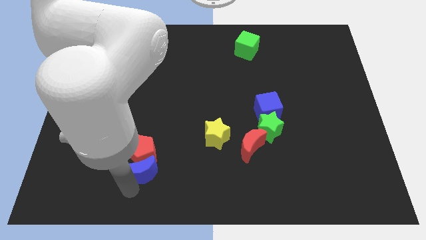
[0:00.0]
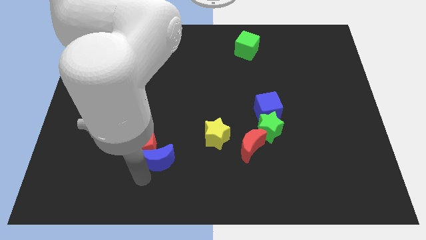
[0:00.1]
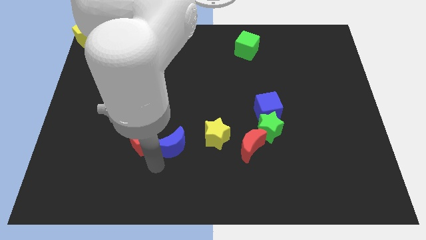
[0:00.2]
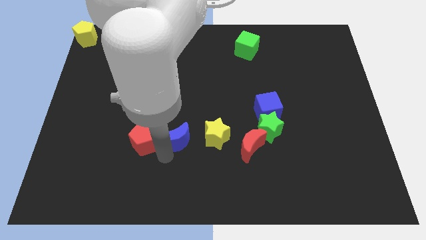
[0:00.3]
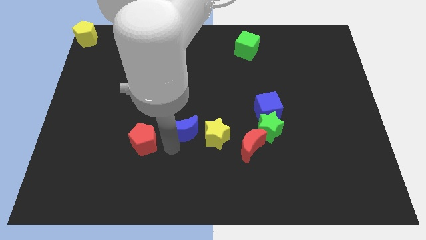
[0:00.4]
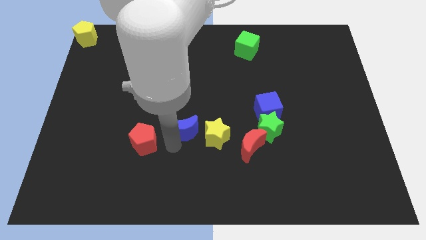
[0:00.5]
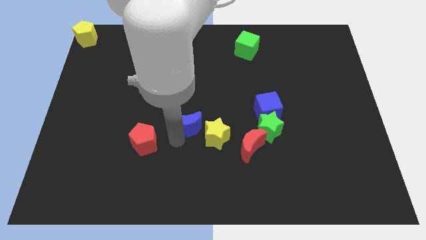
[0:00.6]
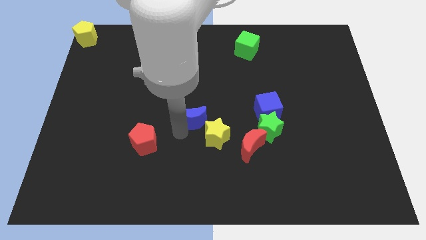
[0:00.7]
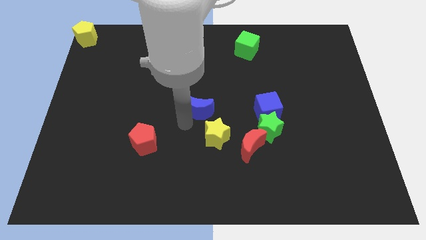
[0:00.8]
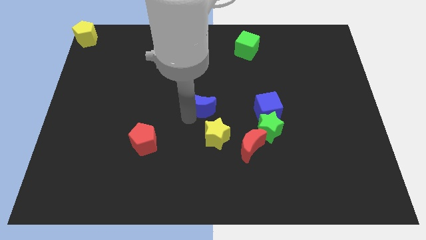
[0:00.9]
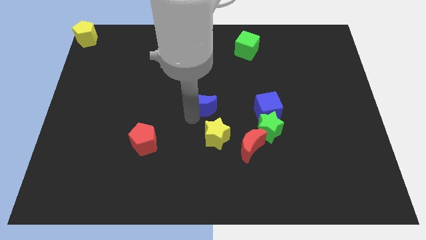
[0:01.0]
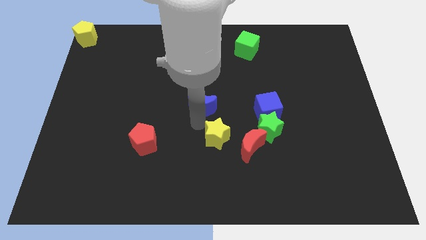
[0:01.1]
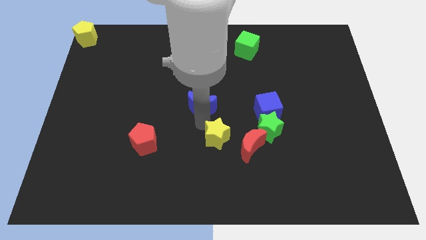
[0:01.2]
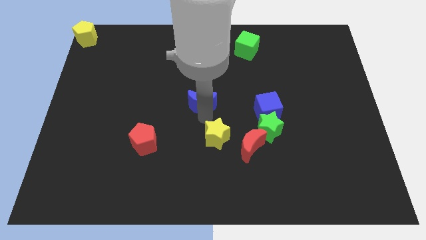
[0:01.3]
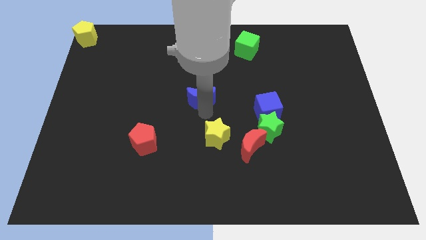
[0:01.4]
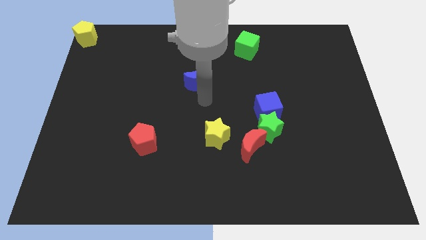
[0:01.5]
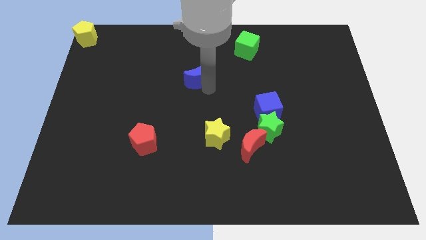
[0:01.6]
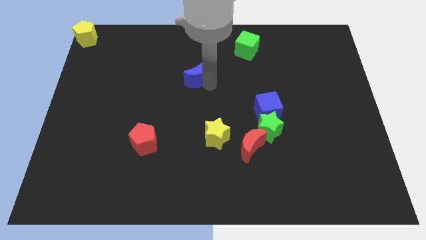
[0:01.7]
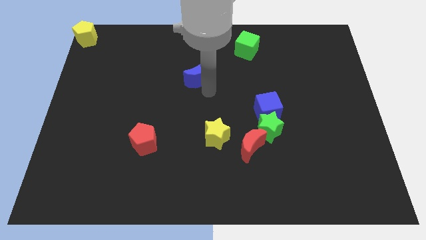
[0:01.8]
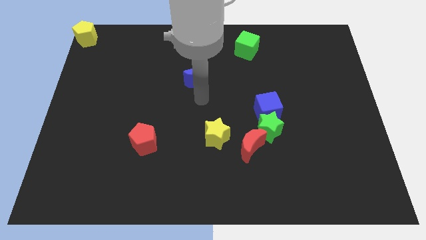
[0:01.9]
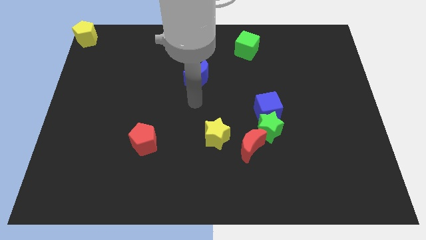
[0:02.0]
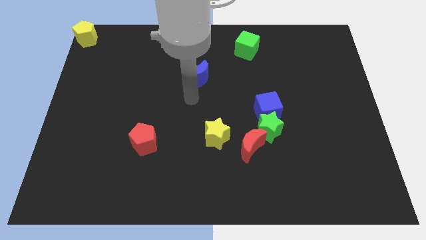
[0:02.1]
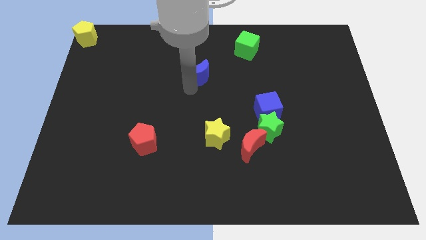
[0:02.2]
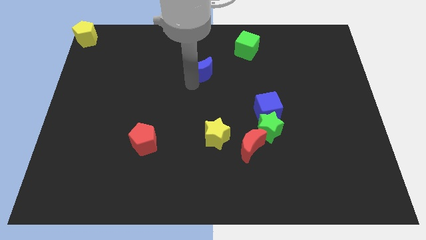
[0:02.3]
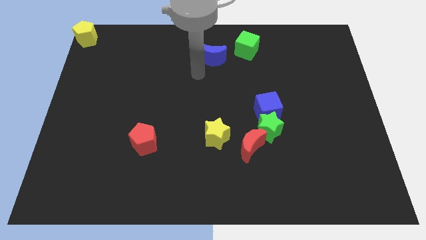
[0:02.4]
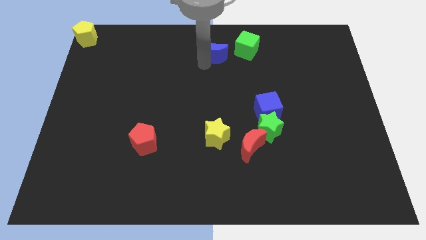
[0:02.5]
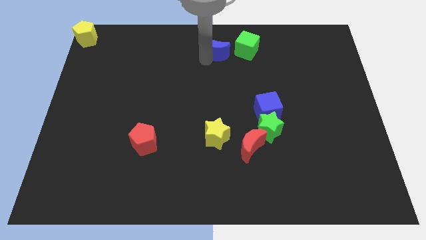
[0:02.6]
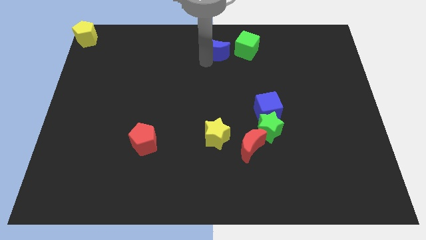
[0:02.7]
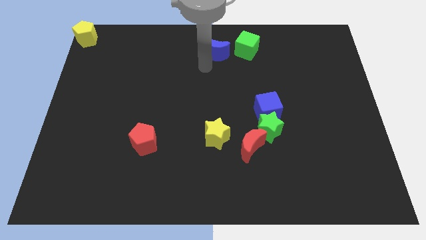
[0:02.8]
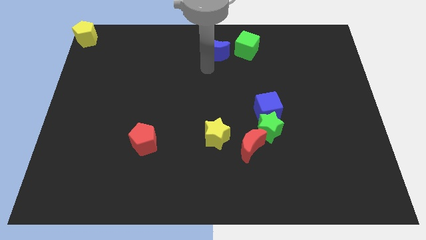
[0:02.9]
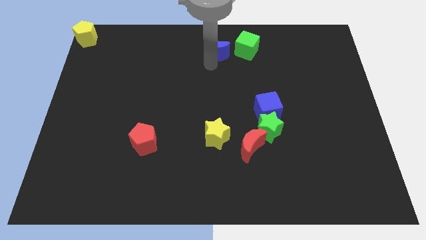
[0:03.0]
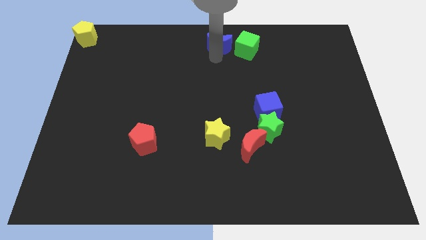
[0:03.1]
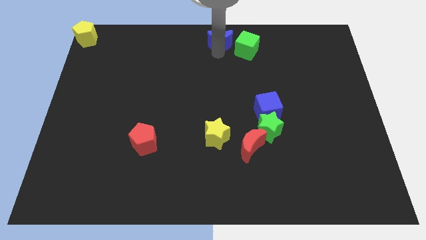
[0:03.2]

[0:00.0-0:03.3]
place the blue moon to the left of the green cube

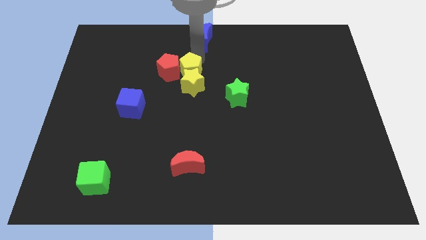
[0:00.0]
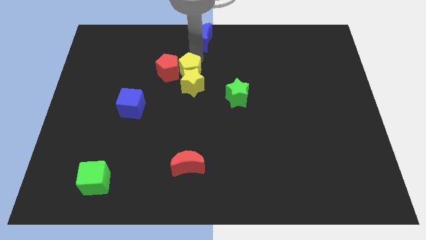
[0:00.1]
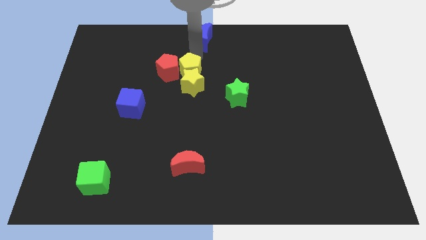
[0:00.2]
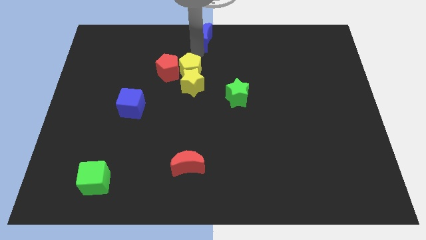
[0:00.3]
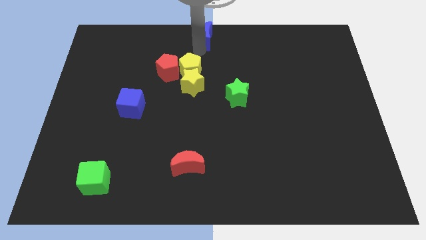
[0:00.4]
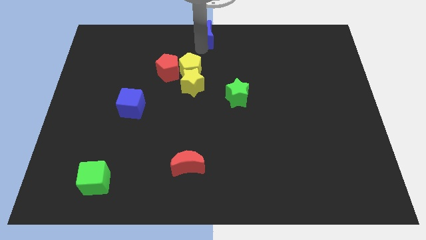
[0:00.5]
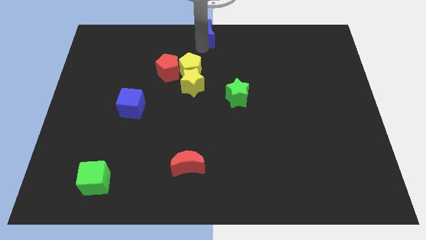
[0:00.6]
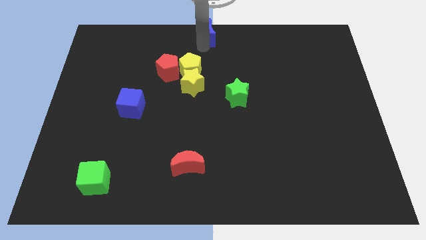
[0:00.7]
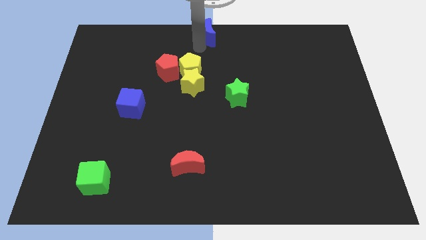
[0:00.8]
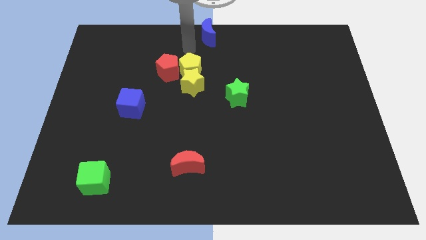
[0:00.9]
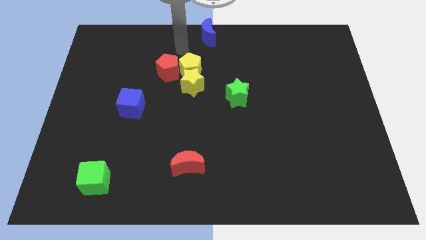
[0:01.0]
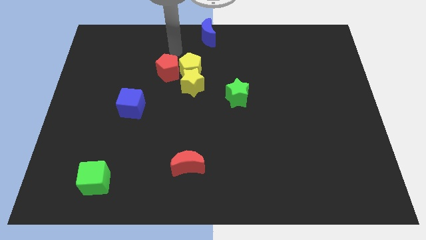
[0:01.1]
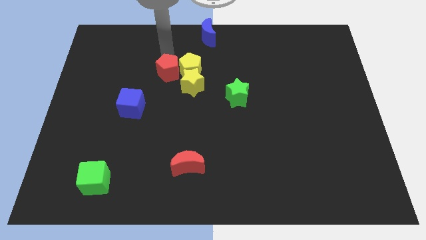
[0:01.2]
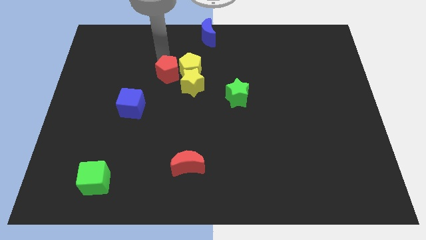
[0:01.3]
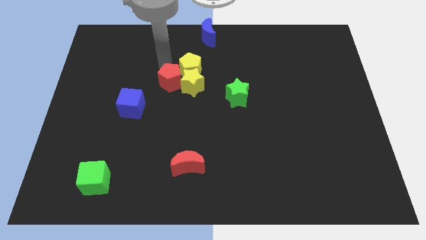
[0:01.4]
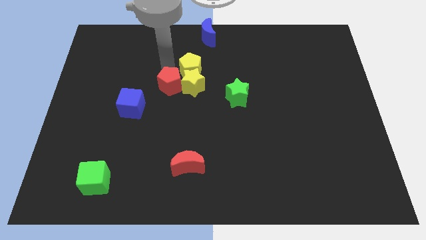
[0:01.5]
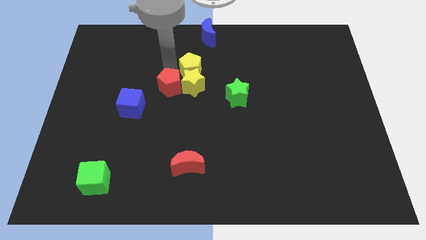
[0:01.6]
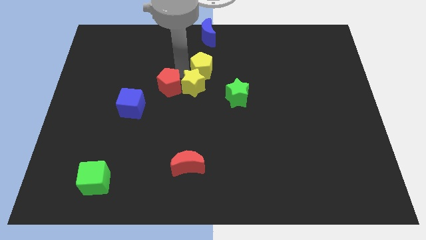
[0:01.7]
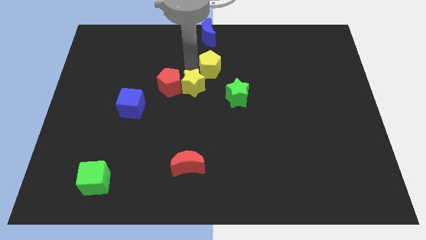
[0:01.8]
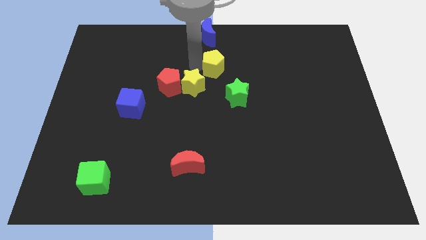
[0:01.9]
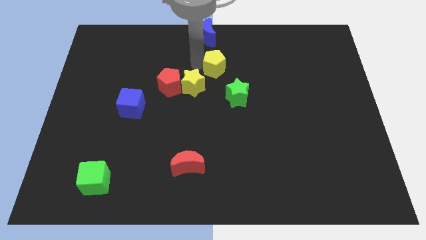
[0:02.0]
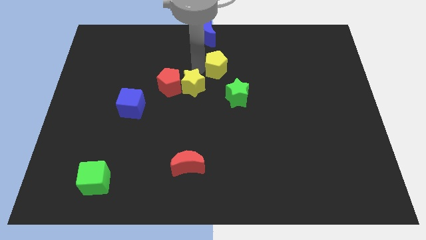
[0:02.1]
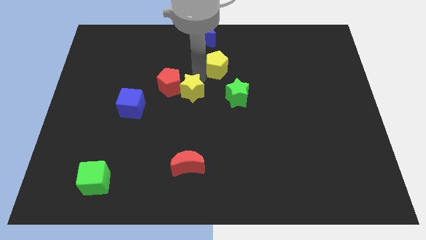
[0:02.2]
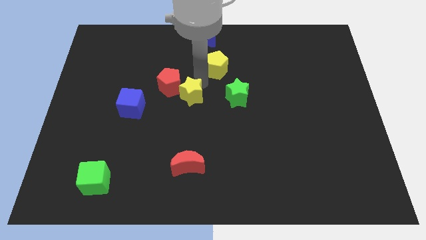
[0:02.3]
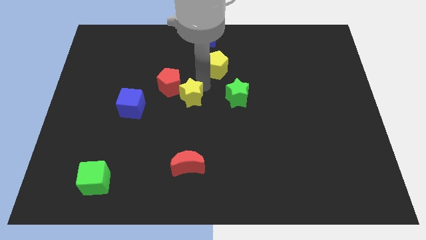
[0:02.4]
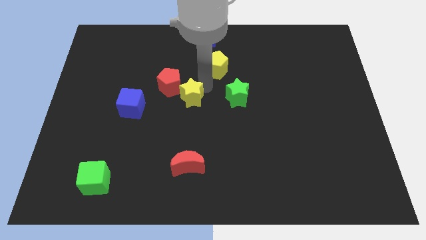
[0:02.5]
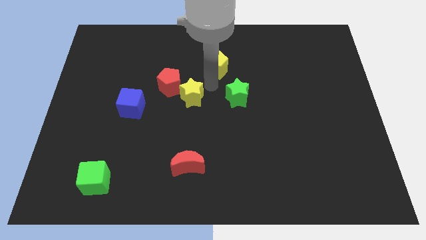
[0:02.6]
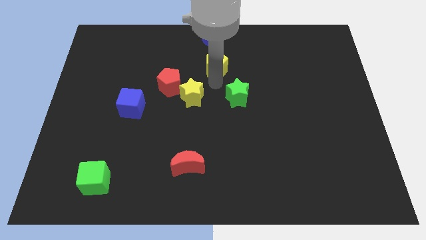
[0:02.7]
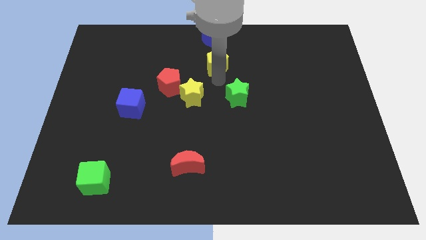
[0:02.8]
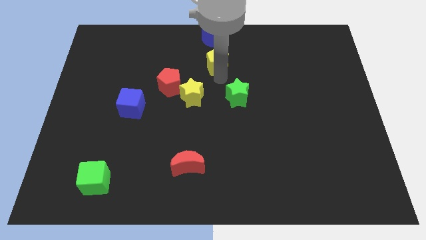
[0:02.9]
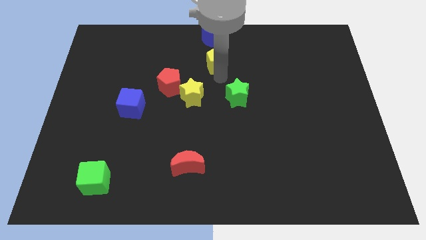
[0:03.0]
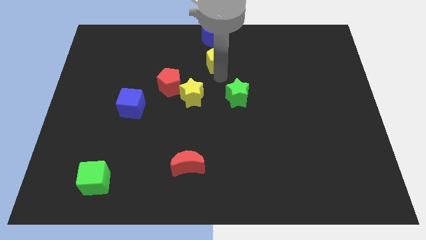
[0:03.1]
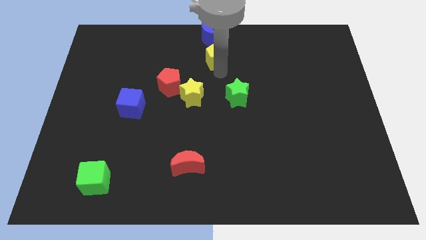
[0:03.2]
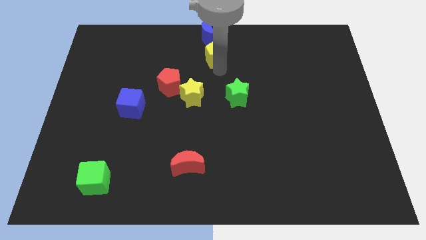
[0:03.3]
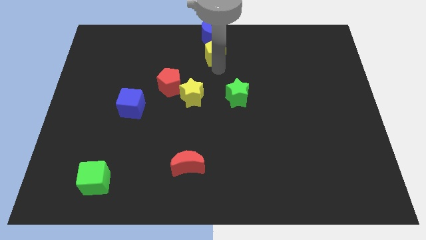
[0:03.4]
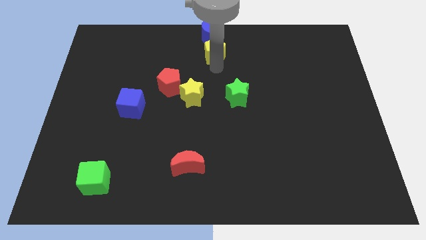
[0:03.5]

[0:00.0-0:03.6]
slide the yellow pentagon to the bottom of the blue moon

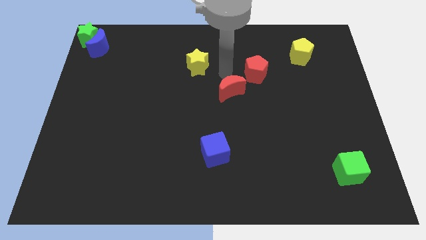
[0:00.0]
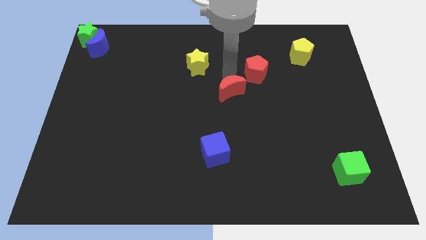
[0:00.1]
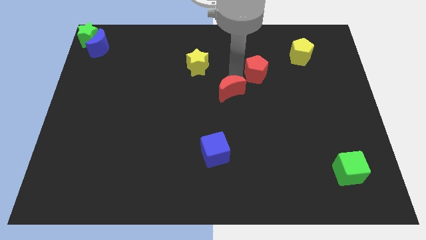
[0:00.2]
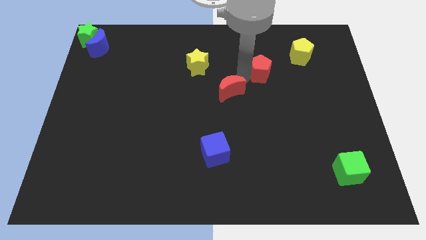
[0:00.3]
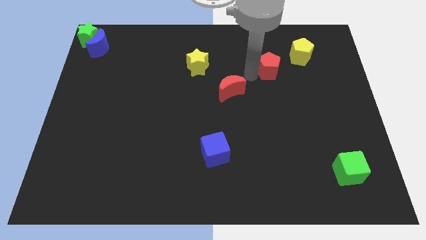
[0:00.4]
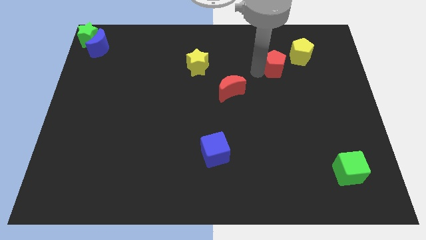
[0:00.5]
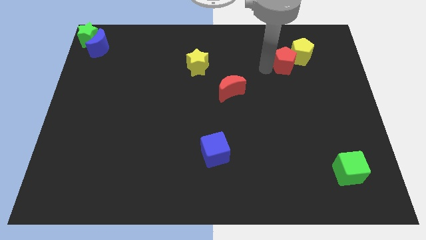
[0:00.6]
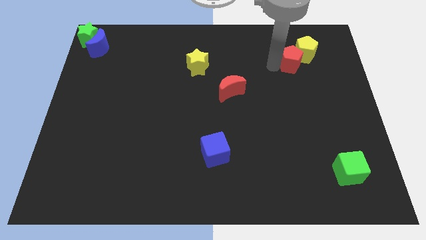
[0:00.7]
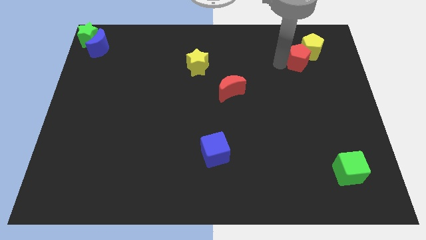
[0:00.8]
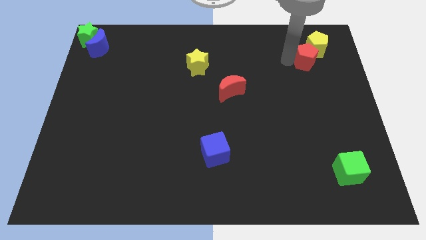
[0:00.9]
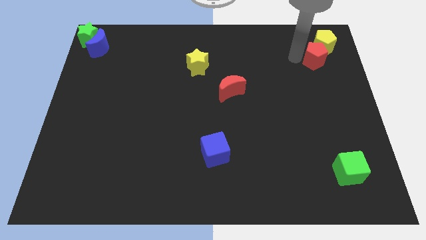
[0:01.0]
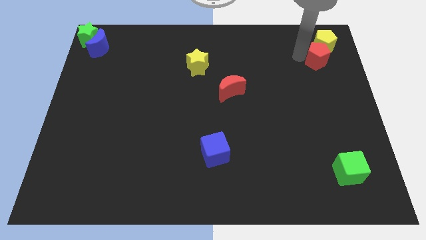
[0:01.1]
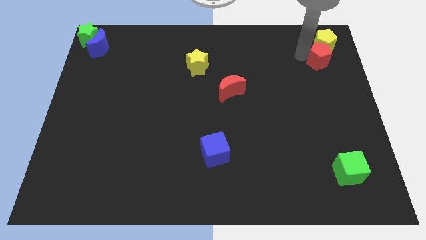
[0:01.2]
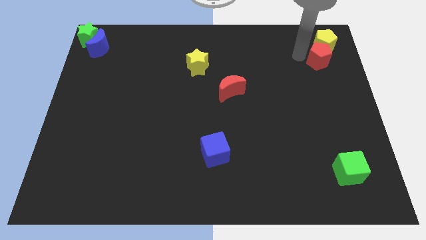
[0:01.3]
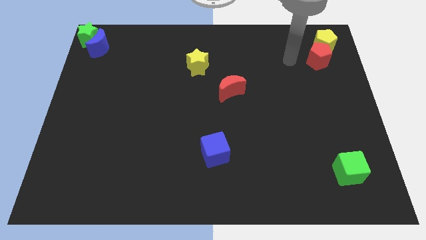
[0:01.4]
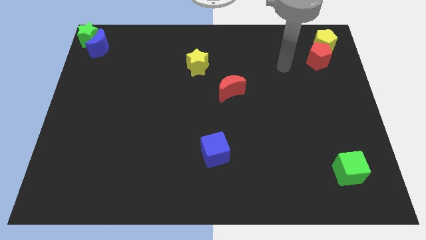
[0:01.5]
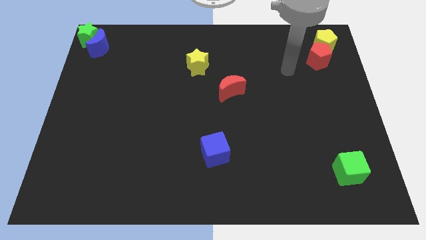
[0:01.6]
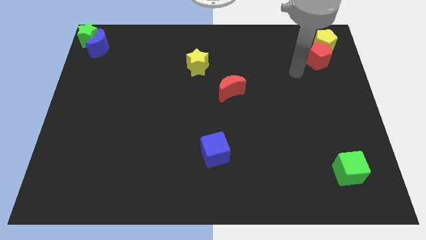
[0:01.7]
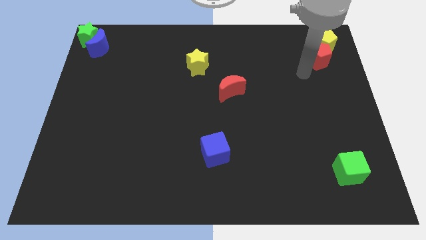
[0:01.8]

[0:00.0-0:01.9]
push the red pentagon along with the yellow pentagon towards the top right side of the board

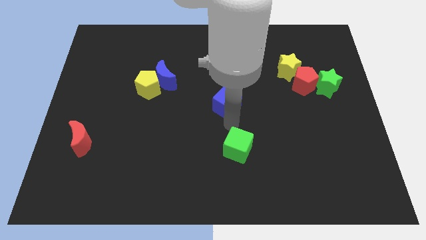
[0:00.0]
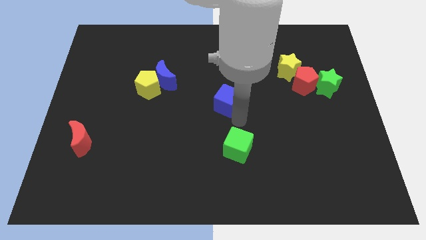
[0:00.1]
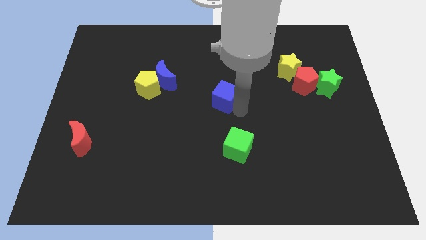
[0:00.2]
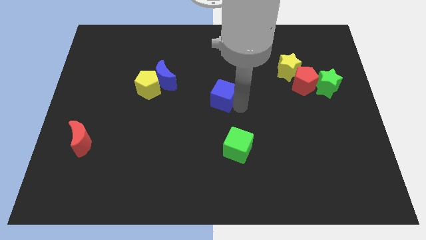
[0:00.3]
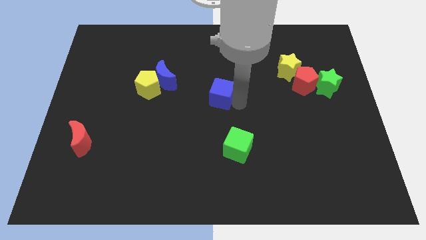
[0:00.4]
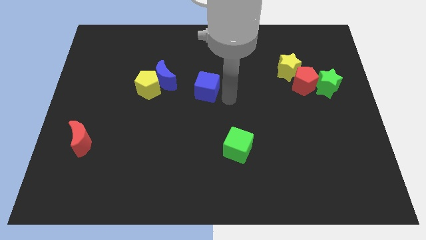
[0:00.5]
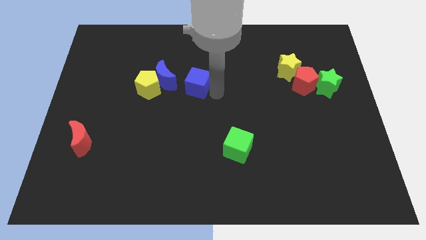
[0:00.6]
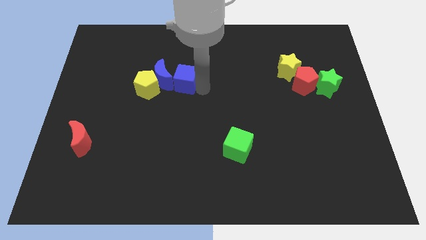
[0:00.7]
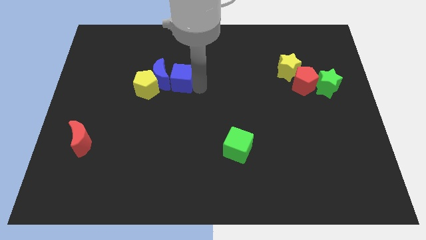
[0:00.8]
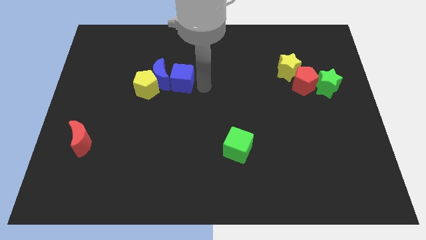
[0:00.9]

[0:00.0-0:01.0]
place the blue cube right to the blue moon
